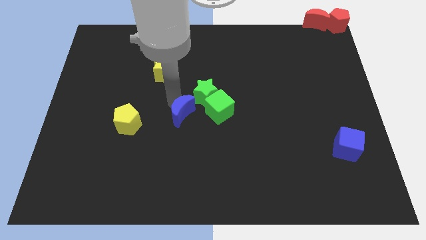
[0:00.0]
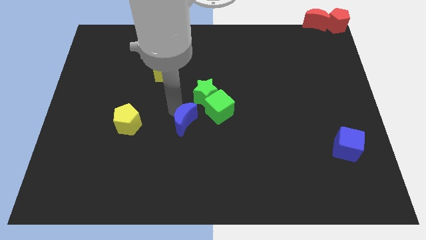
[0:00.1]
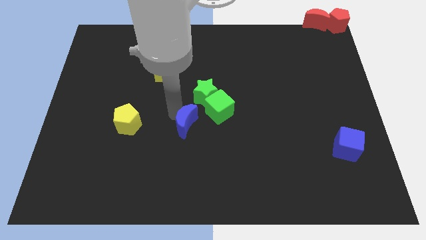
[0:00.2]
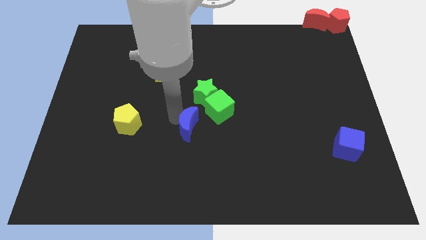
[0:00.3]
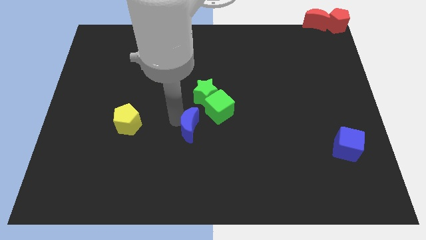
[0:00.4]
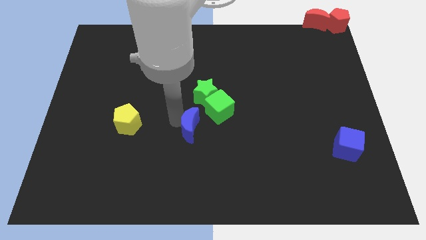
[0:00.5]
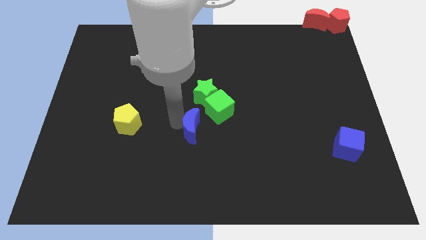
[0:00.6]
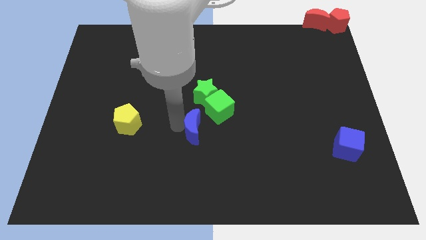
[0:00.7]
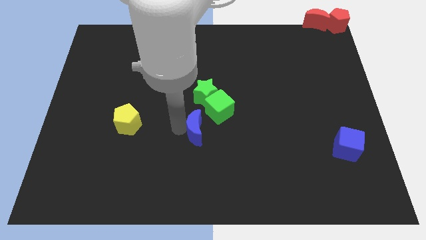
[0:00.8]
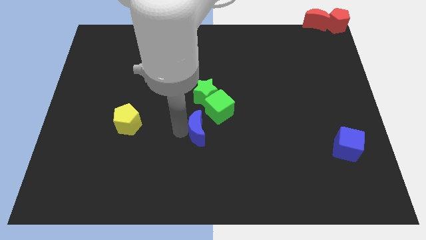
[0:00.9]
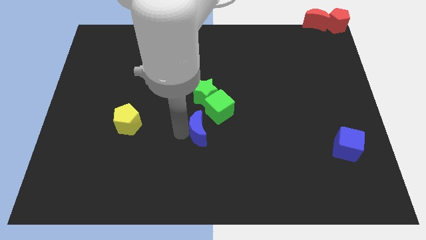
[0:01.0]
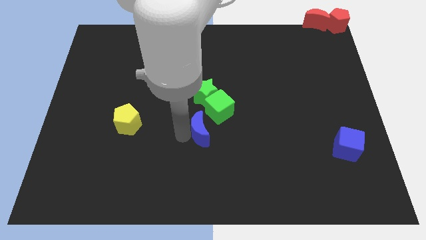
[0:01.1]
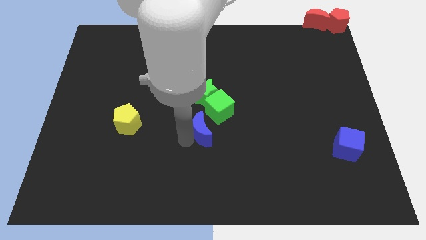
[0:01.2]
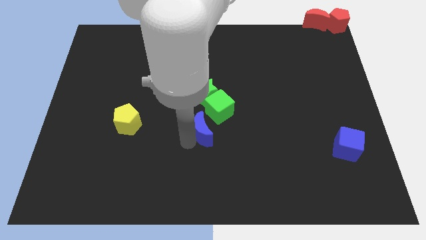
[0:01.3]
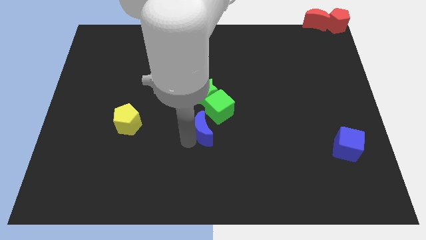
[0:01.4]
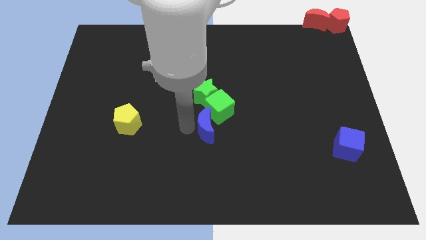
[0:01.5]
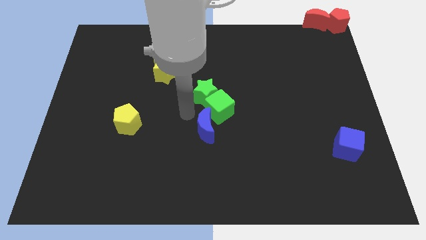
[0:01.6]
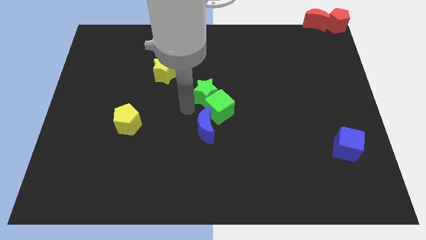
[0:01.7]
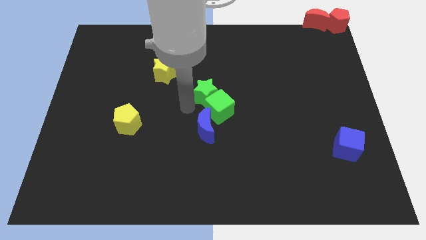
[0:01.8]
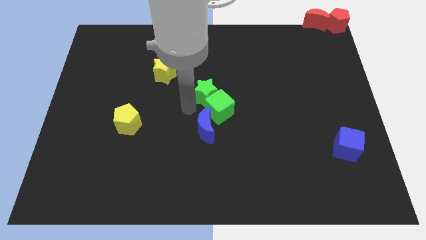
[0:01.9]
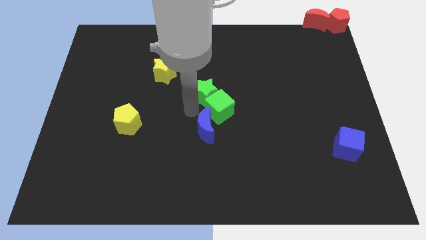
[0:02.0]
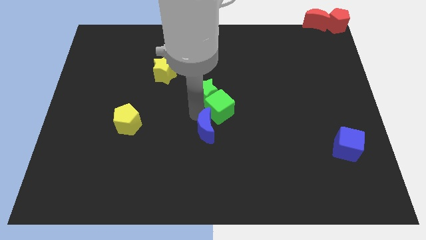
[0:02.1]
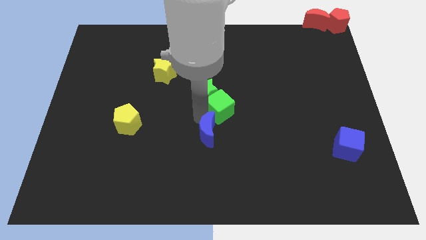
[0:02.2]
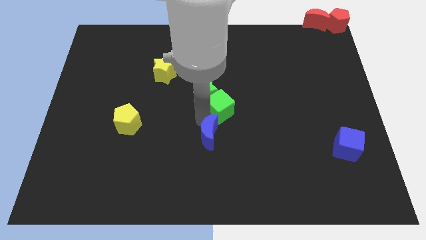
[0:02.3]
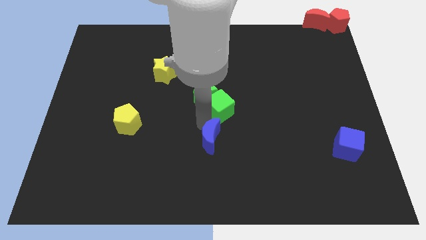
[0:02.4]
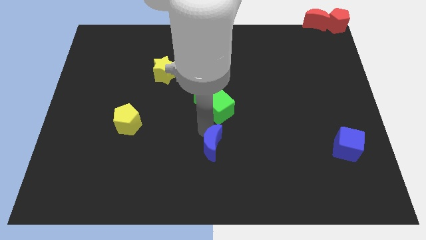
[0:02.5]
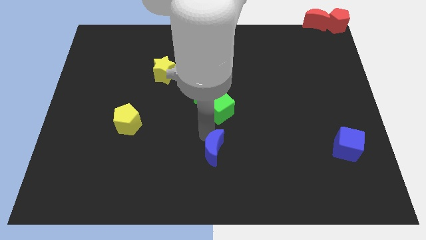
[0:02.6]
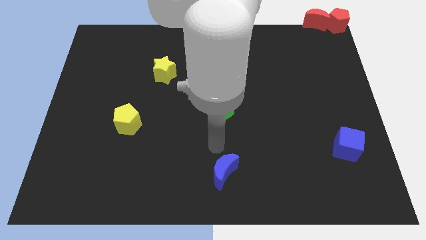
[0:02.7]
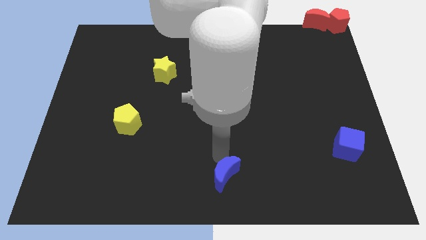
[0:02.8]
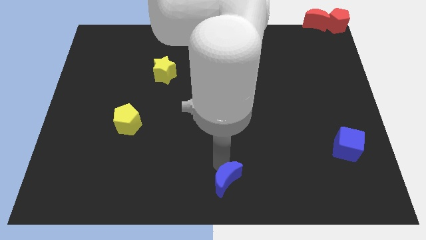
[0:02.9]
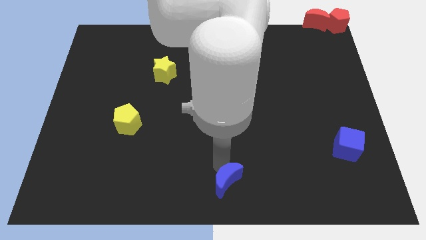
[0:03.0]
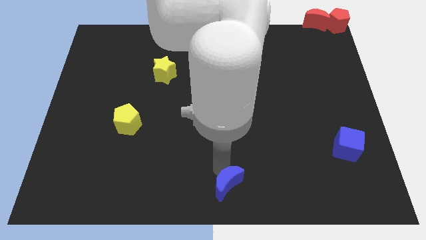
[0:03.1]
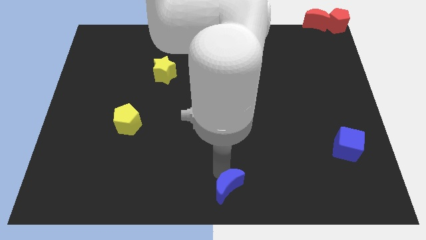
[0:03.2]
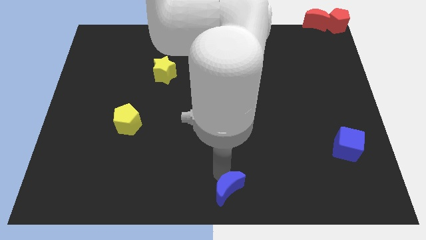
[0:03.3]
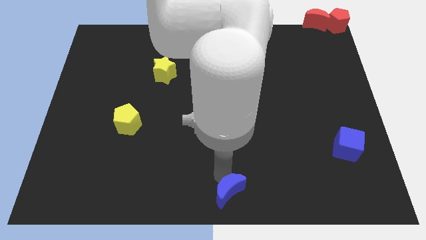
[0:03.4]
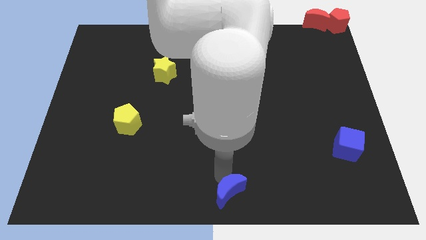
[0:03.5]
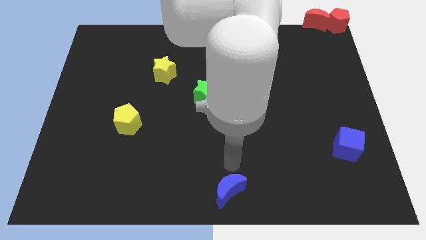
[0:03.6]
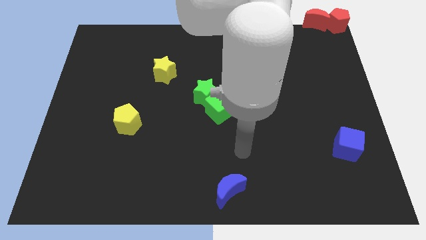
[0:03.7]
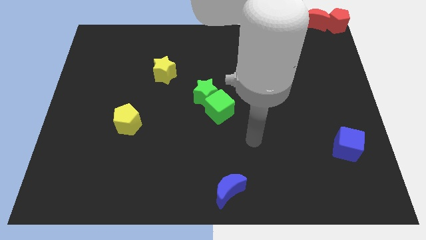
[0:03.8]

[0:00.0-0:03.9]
push the blue crescent below the green cube

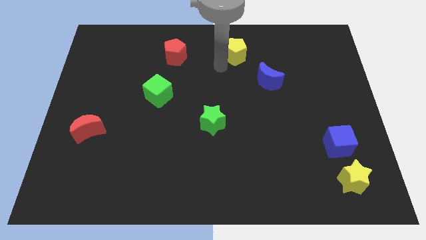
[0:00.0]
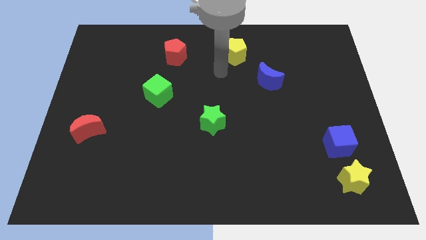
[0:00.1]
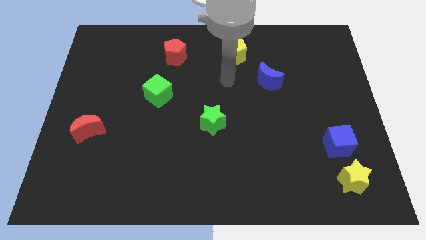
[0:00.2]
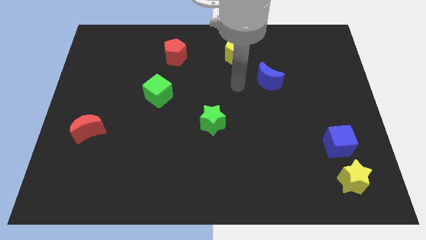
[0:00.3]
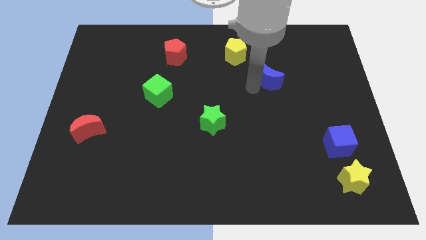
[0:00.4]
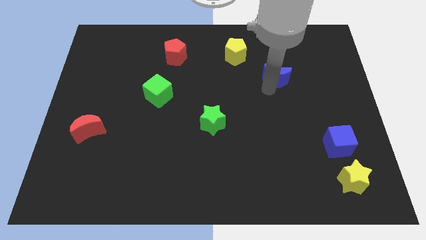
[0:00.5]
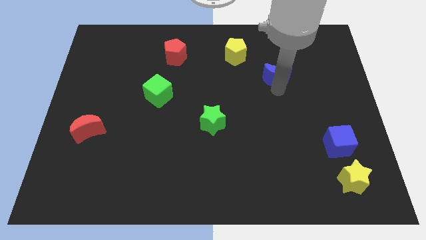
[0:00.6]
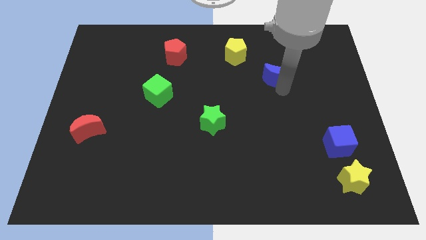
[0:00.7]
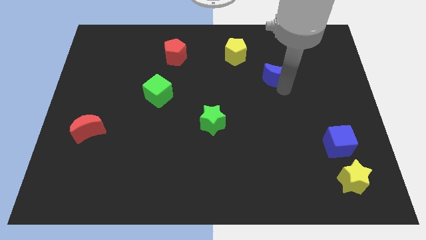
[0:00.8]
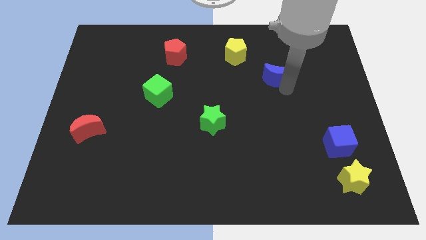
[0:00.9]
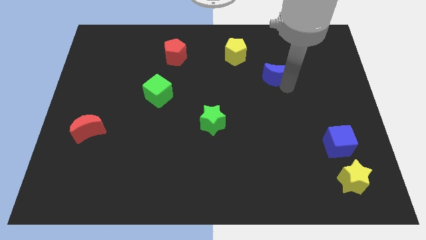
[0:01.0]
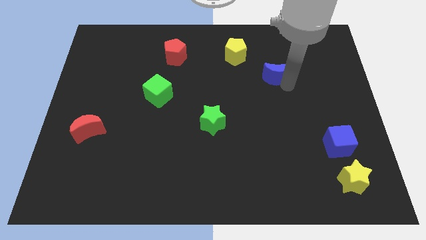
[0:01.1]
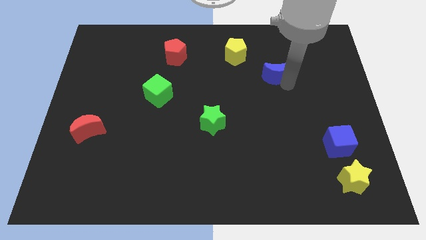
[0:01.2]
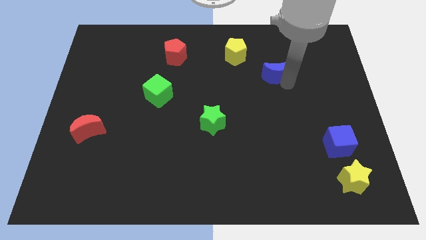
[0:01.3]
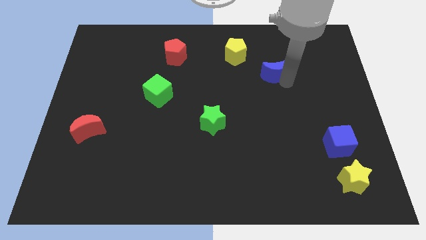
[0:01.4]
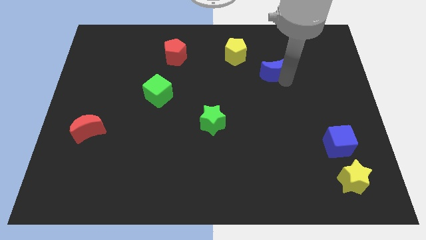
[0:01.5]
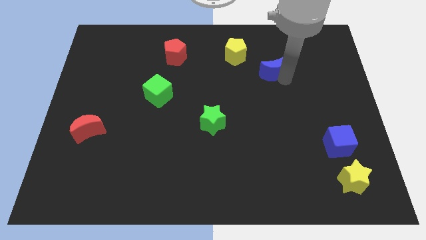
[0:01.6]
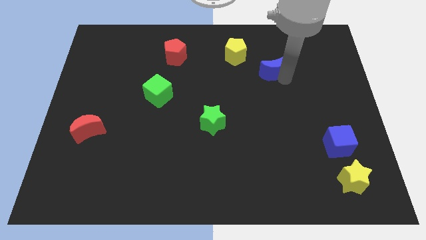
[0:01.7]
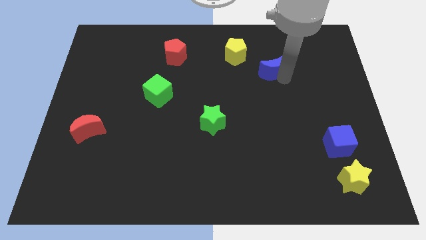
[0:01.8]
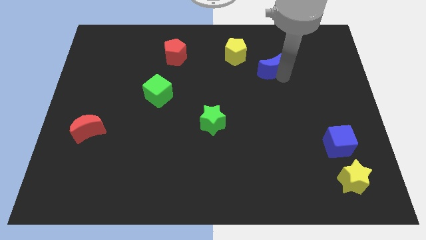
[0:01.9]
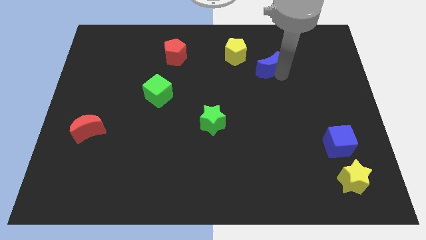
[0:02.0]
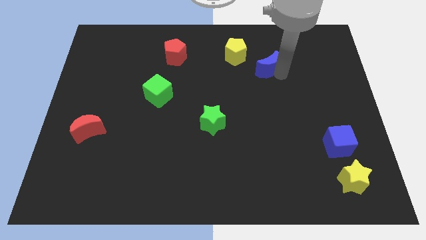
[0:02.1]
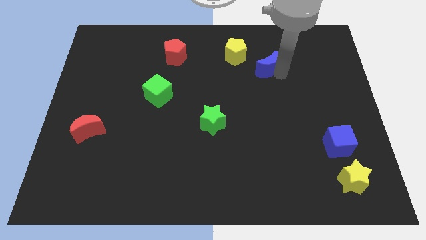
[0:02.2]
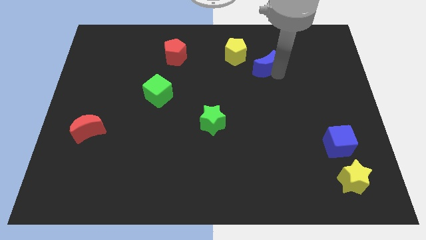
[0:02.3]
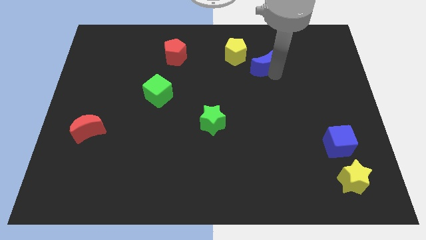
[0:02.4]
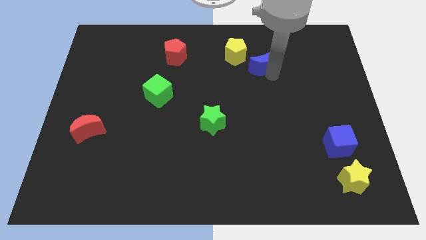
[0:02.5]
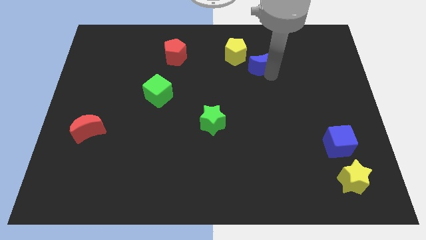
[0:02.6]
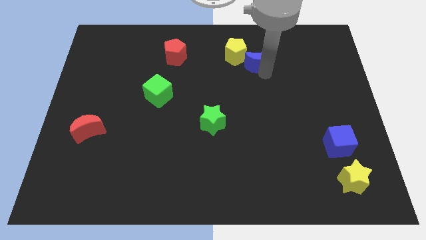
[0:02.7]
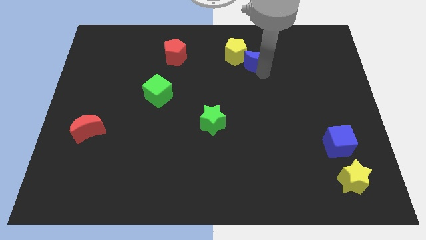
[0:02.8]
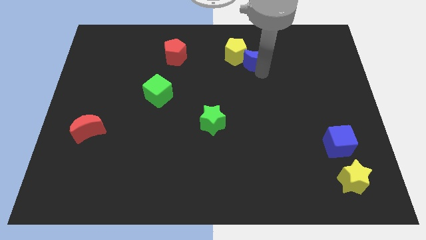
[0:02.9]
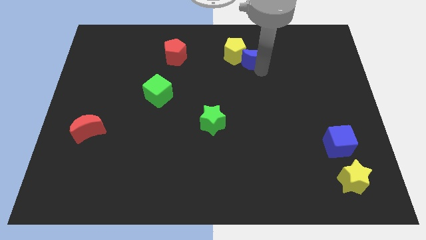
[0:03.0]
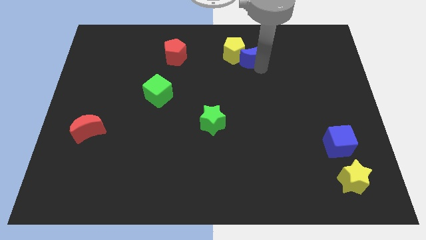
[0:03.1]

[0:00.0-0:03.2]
push blue crescent near to yellow pentagon

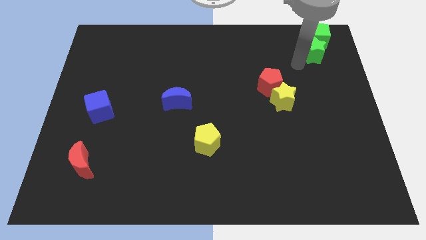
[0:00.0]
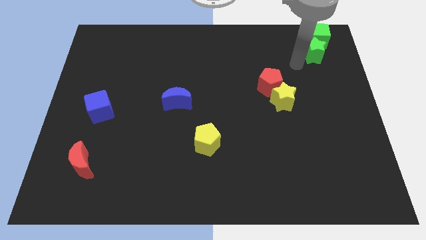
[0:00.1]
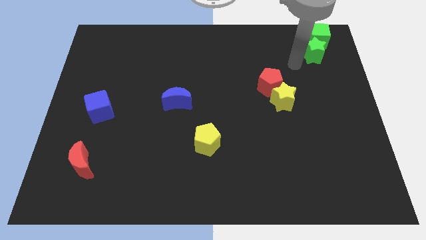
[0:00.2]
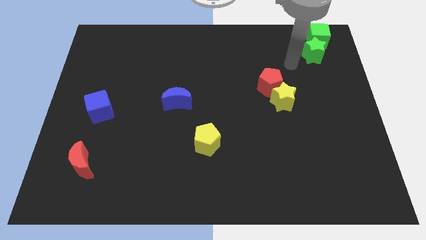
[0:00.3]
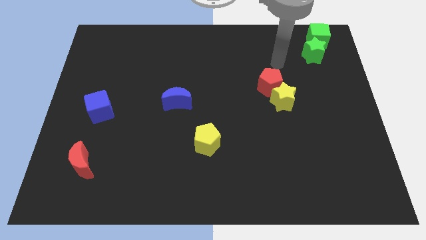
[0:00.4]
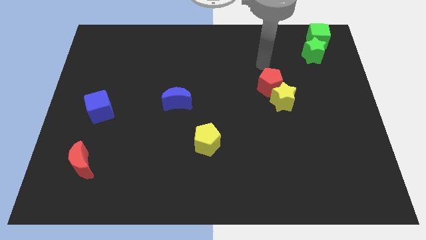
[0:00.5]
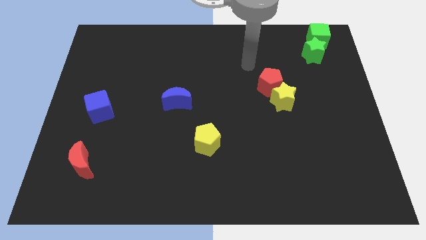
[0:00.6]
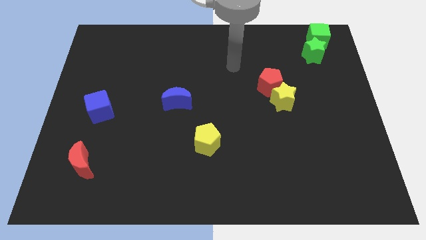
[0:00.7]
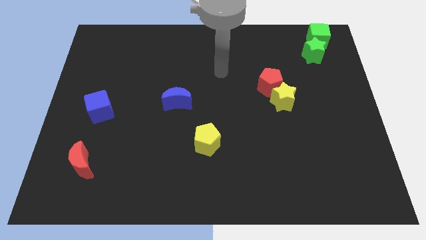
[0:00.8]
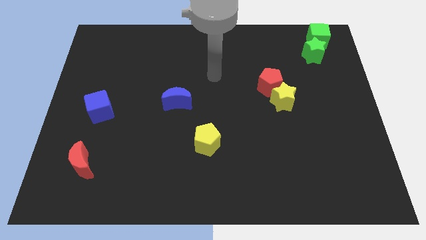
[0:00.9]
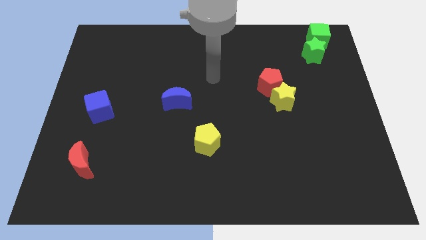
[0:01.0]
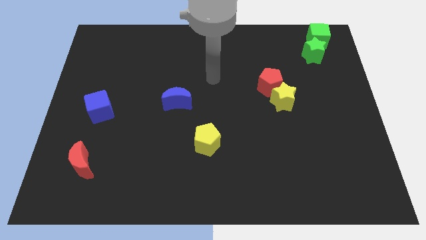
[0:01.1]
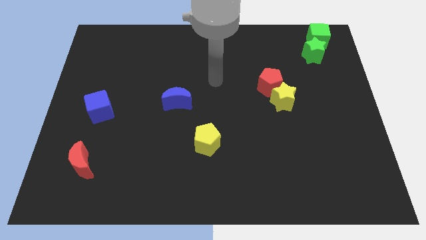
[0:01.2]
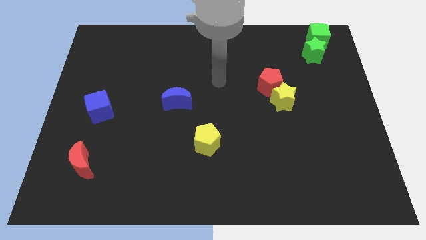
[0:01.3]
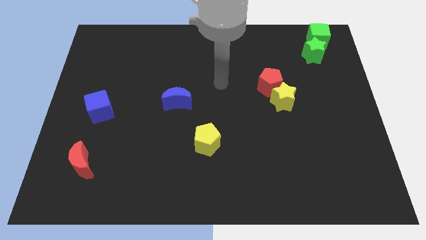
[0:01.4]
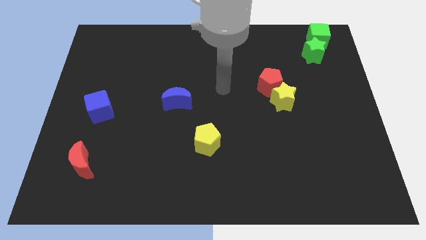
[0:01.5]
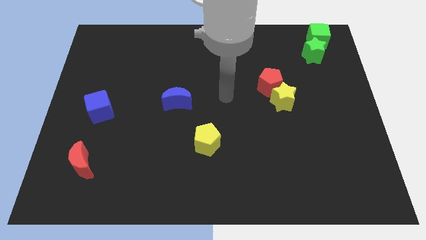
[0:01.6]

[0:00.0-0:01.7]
move the arm towards the center of the board
